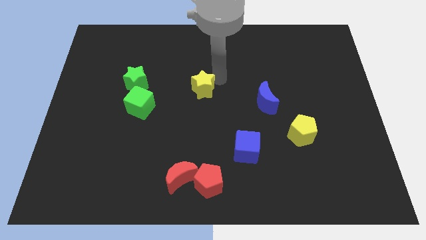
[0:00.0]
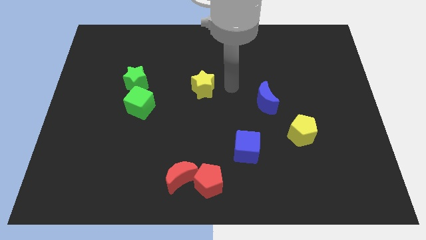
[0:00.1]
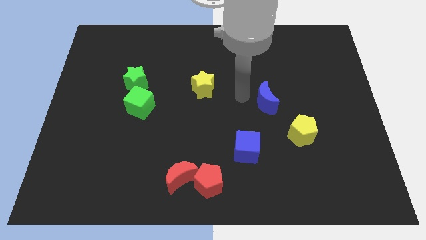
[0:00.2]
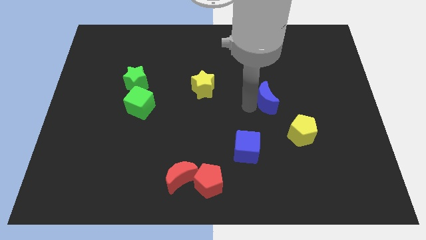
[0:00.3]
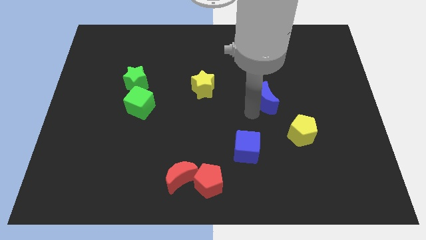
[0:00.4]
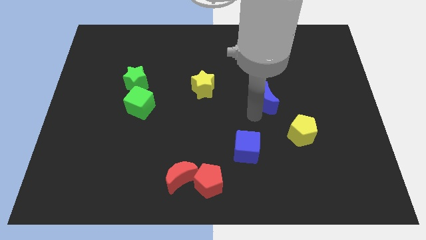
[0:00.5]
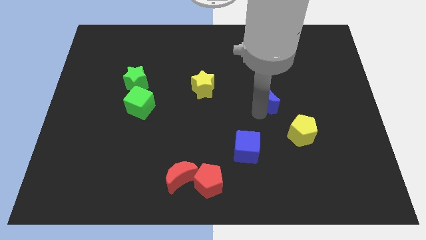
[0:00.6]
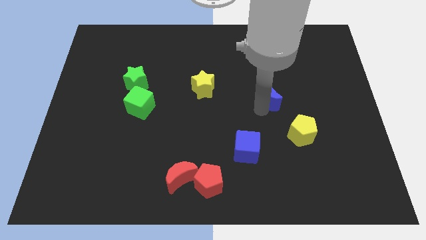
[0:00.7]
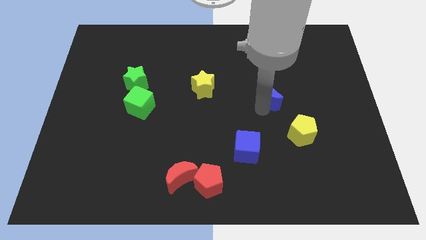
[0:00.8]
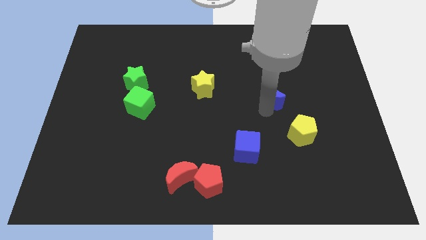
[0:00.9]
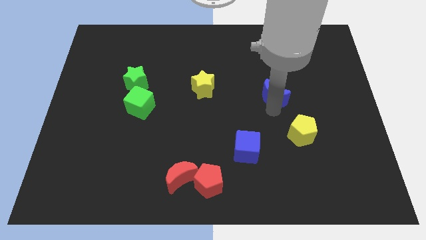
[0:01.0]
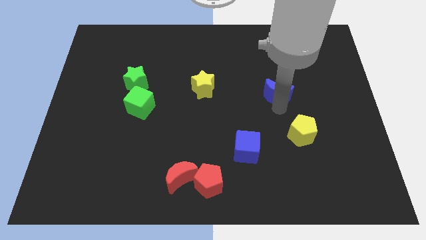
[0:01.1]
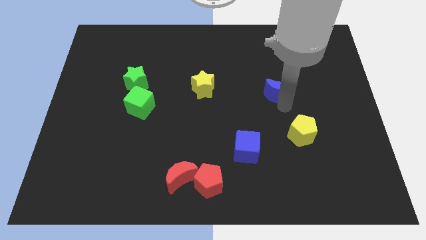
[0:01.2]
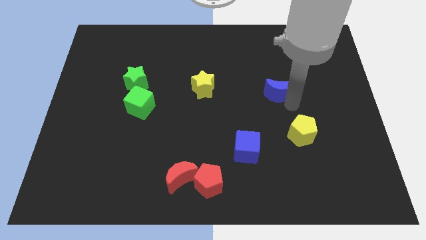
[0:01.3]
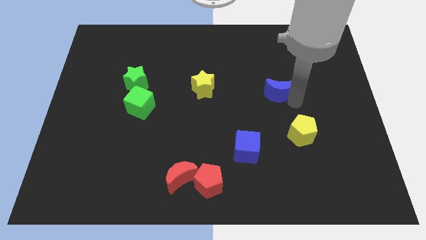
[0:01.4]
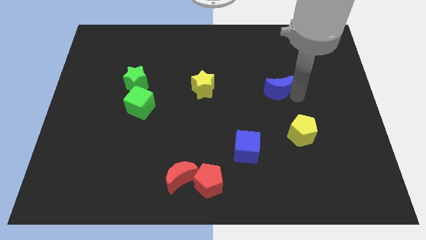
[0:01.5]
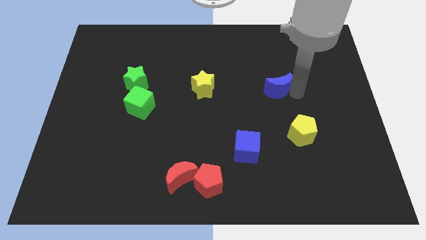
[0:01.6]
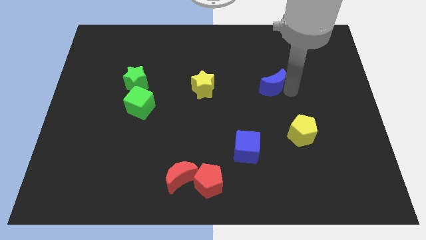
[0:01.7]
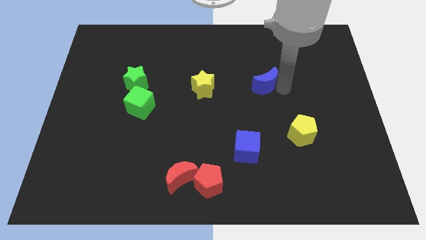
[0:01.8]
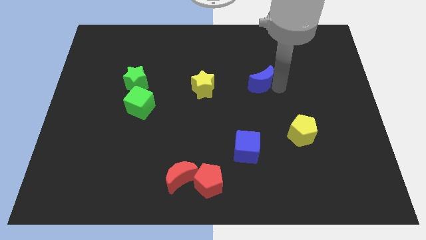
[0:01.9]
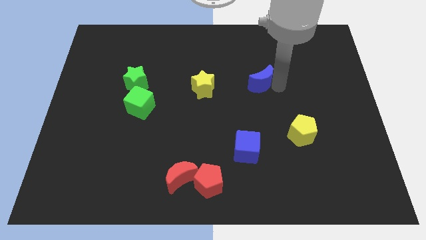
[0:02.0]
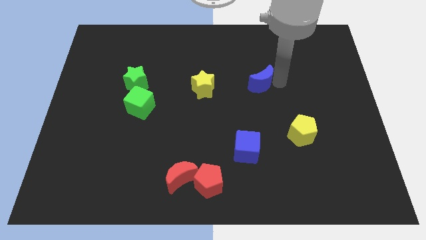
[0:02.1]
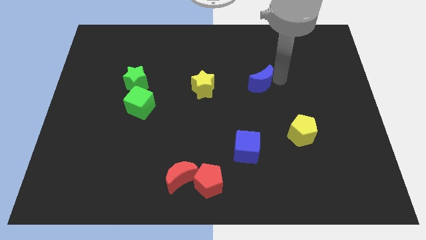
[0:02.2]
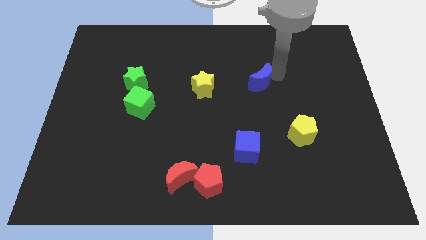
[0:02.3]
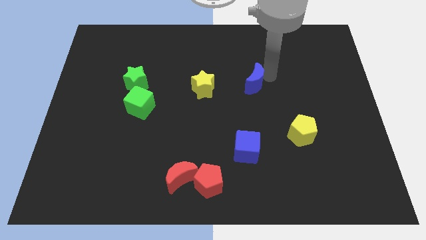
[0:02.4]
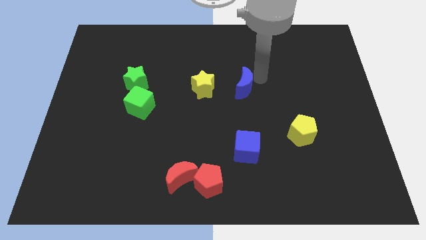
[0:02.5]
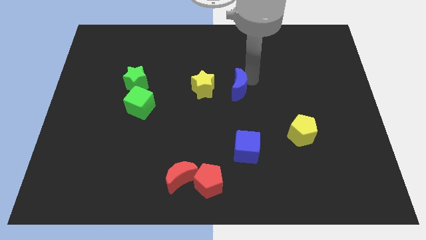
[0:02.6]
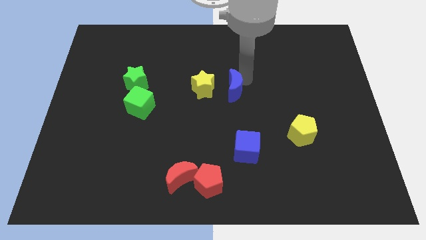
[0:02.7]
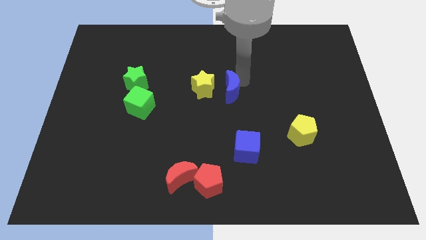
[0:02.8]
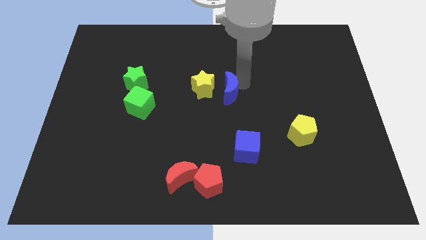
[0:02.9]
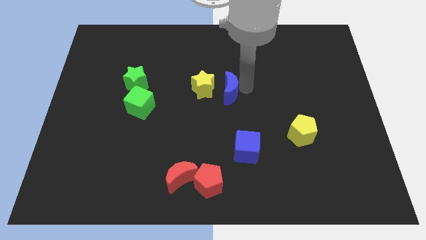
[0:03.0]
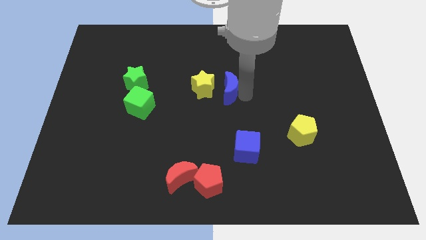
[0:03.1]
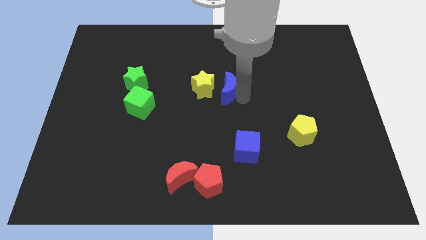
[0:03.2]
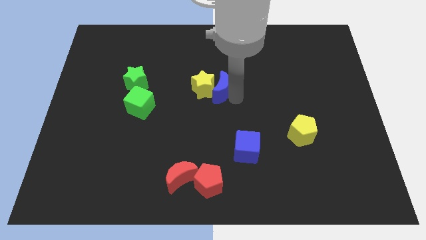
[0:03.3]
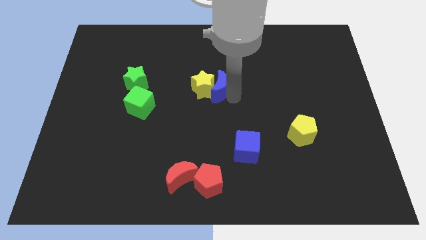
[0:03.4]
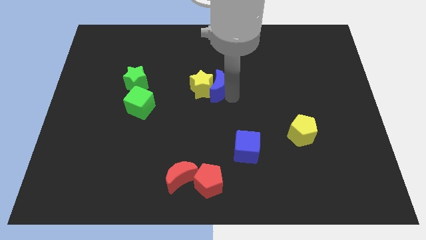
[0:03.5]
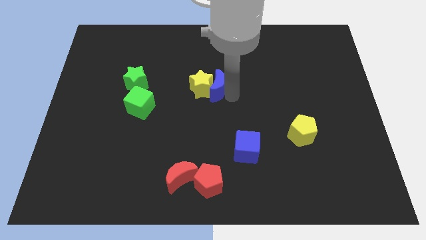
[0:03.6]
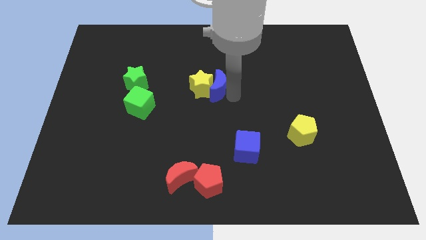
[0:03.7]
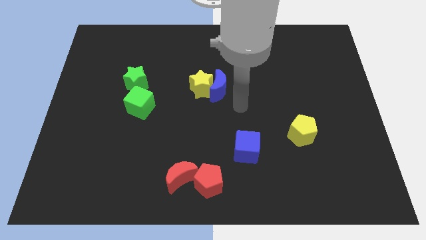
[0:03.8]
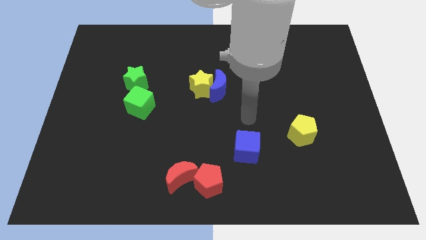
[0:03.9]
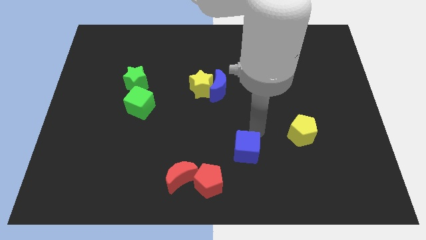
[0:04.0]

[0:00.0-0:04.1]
place the blue moon to the right of the yellow star

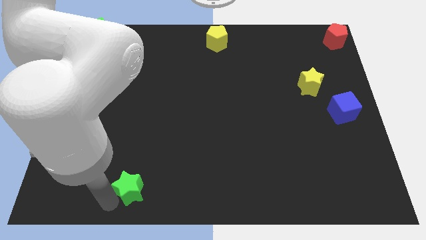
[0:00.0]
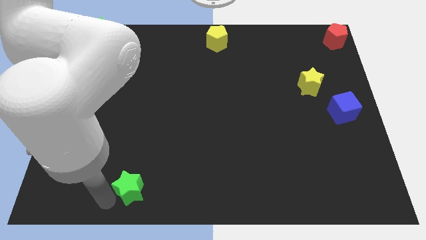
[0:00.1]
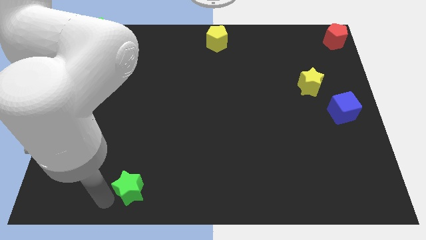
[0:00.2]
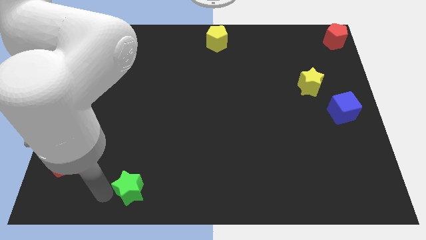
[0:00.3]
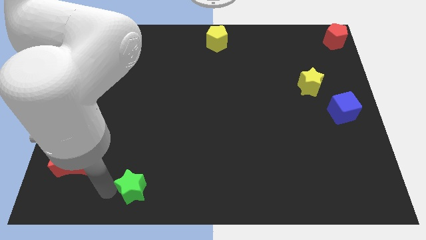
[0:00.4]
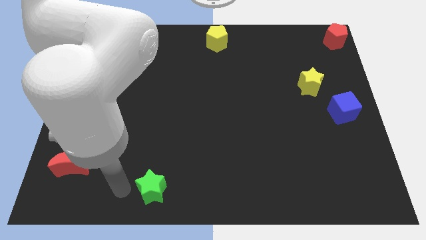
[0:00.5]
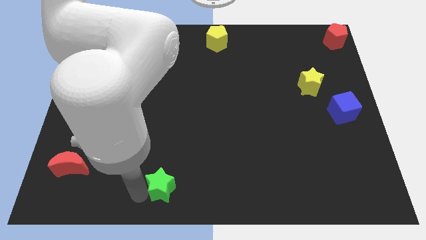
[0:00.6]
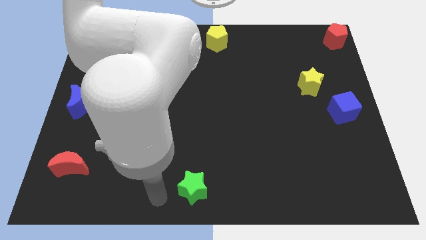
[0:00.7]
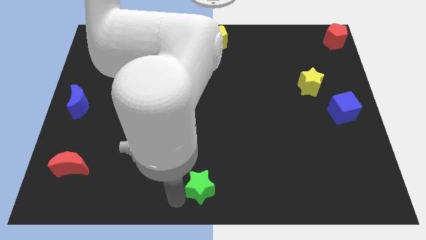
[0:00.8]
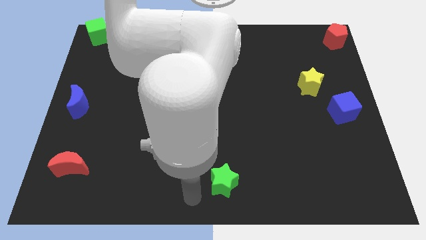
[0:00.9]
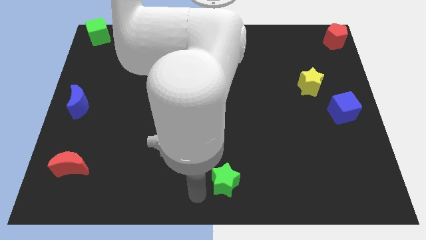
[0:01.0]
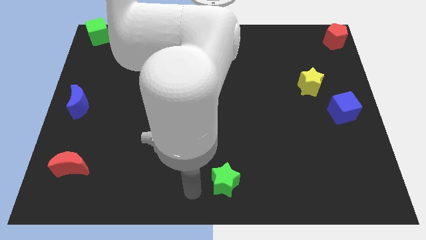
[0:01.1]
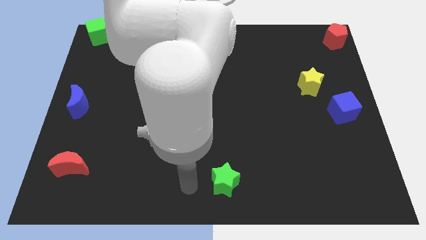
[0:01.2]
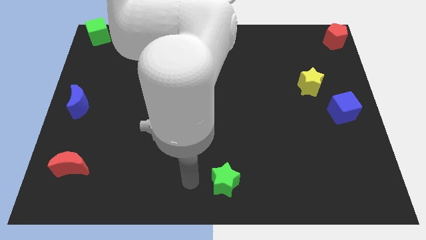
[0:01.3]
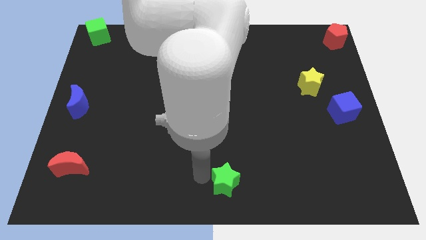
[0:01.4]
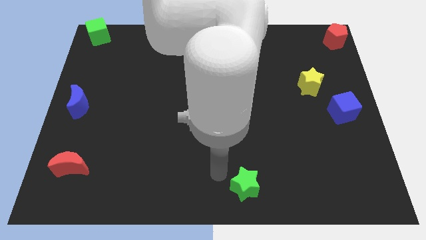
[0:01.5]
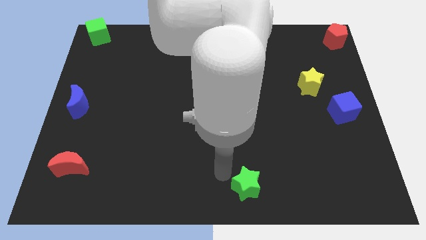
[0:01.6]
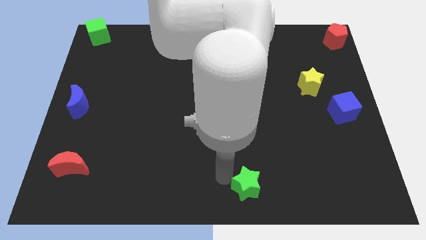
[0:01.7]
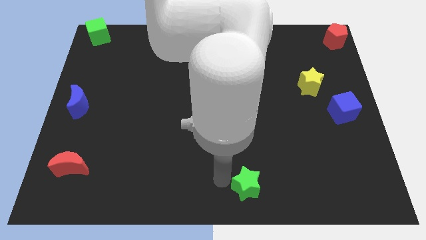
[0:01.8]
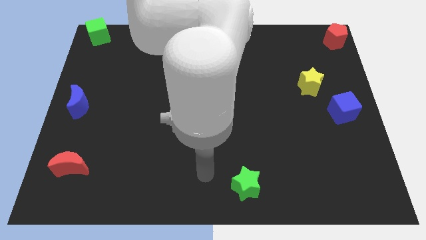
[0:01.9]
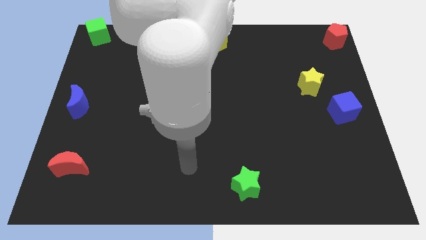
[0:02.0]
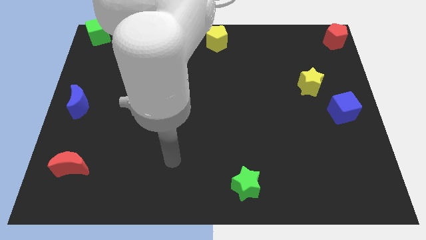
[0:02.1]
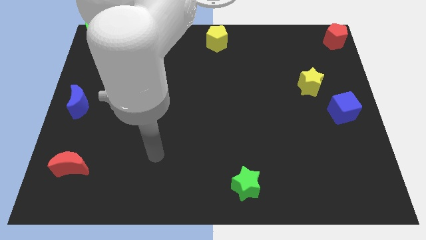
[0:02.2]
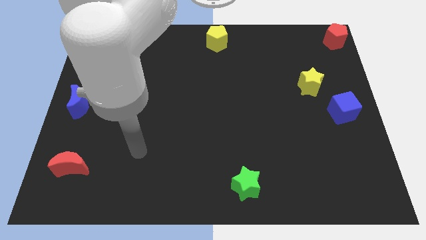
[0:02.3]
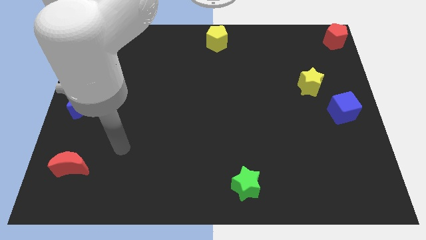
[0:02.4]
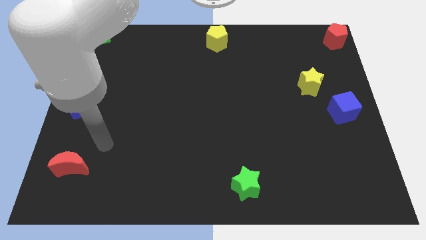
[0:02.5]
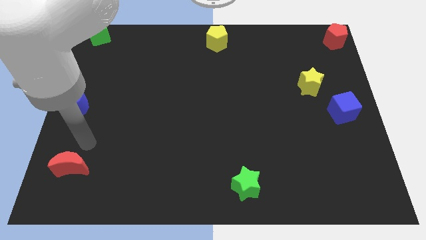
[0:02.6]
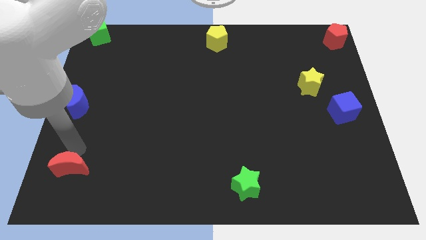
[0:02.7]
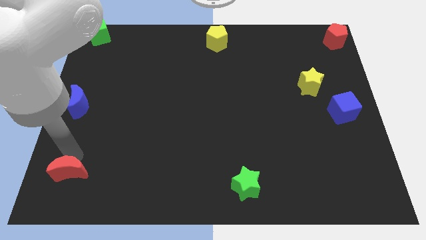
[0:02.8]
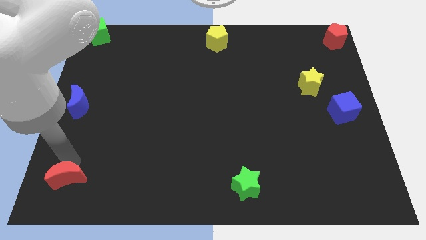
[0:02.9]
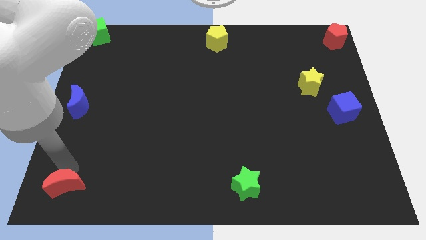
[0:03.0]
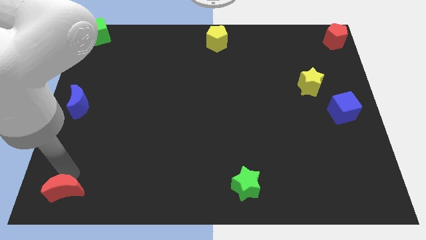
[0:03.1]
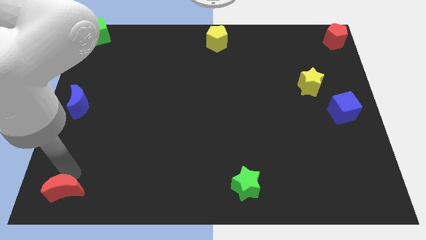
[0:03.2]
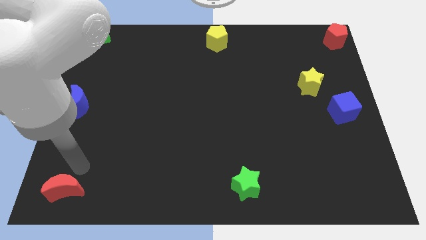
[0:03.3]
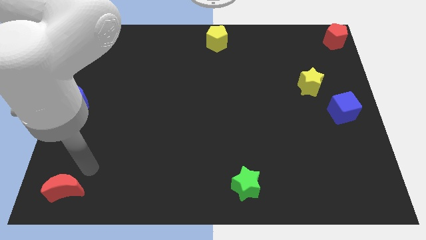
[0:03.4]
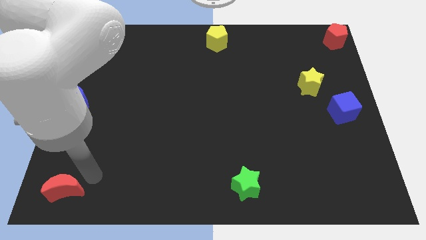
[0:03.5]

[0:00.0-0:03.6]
move green star to the bottom center of the board

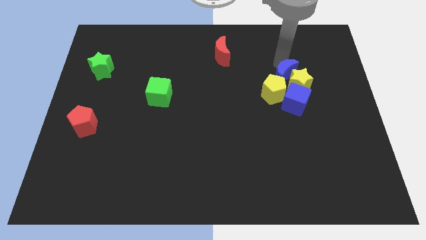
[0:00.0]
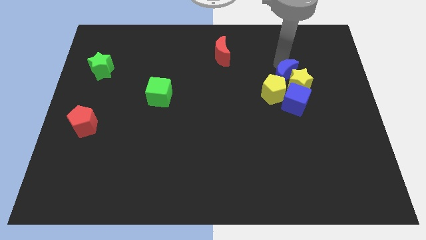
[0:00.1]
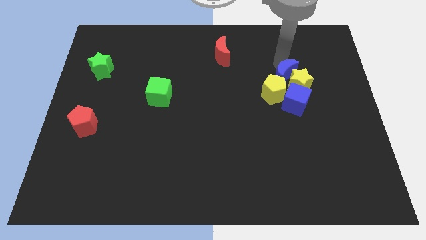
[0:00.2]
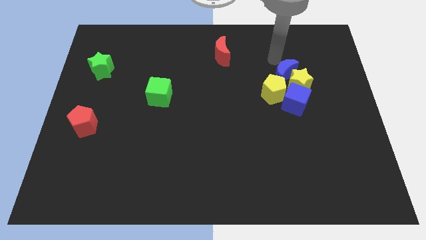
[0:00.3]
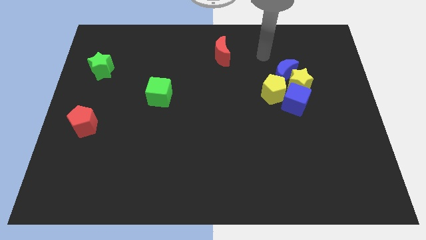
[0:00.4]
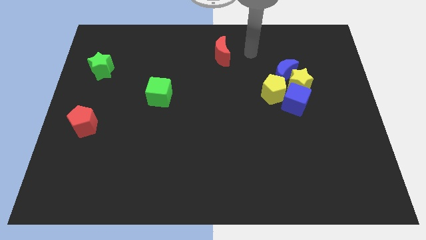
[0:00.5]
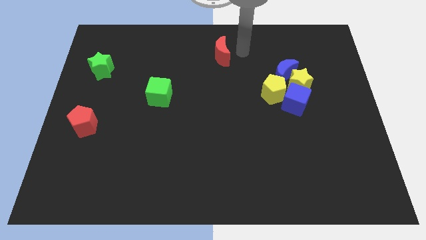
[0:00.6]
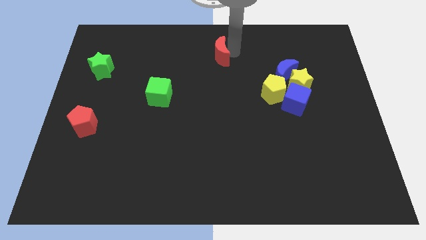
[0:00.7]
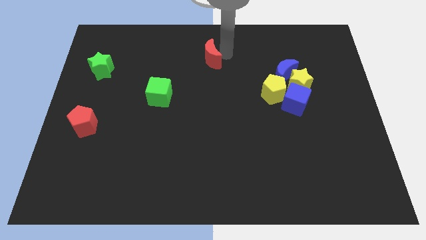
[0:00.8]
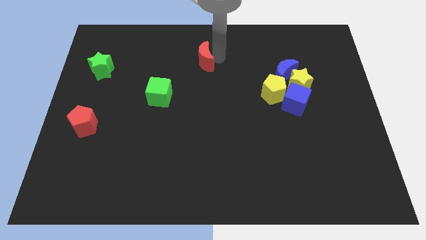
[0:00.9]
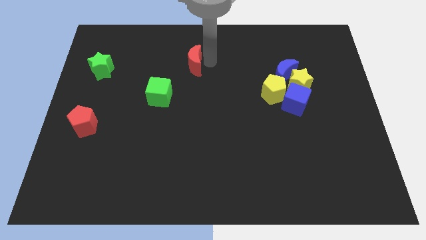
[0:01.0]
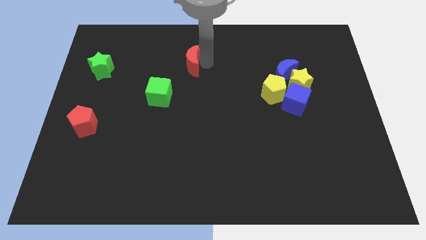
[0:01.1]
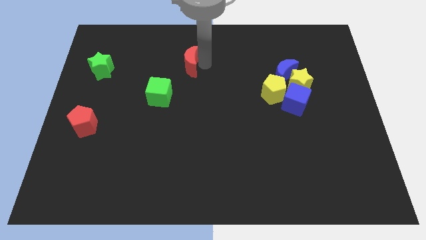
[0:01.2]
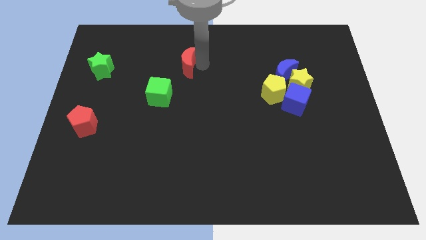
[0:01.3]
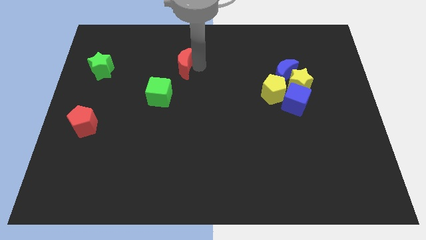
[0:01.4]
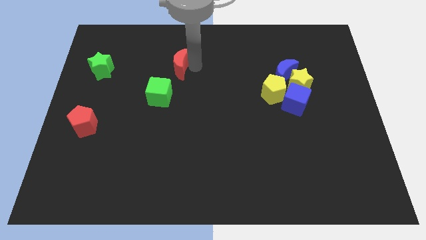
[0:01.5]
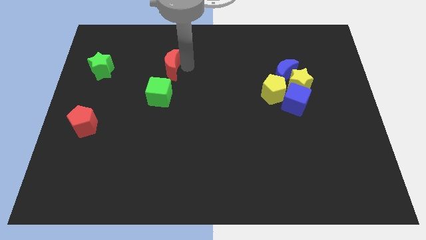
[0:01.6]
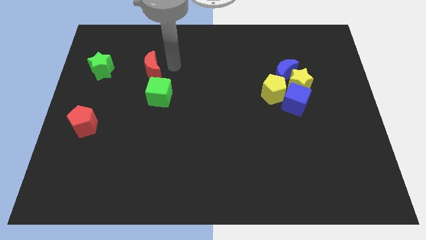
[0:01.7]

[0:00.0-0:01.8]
put the red moon above the green cube
